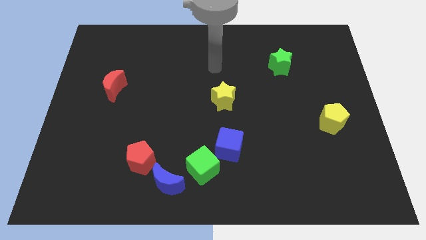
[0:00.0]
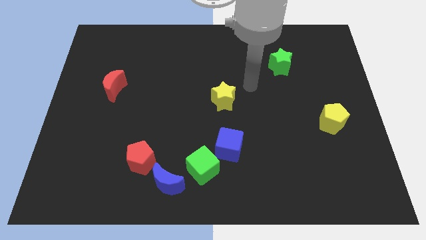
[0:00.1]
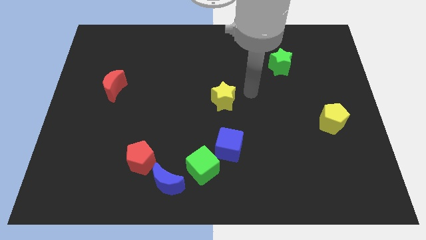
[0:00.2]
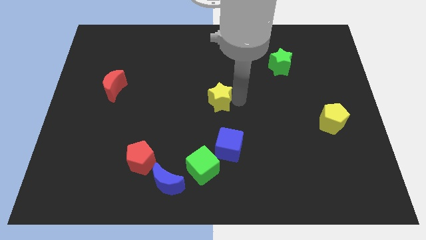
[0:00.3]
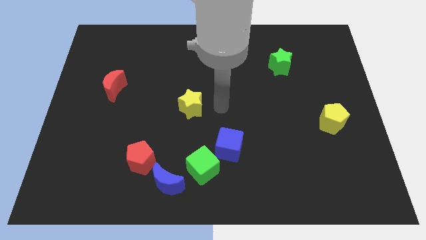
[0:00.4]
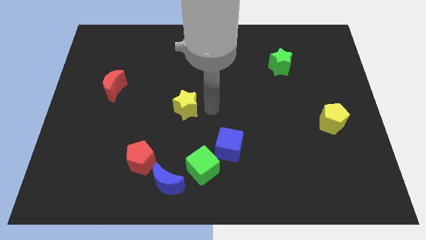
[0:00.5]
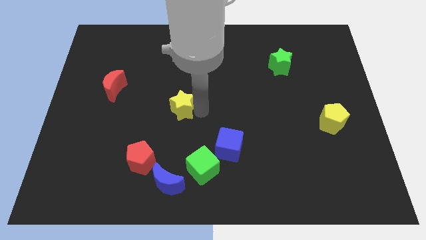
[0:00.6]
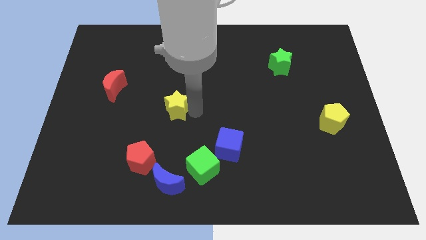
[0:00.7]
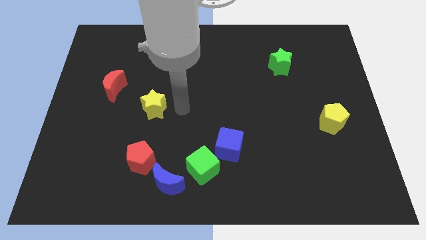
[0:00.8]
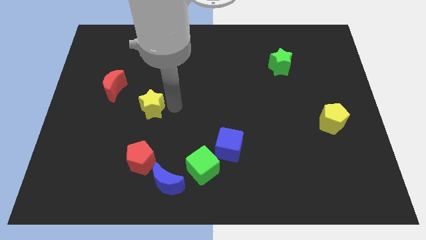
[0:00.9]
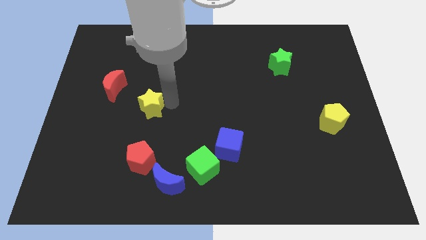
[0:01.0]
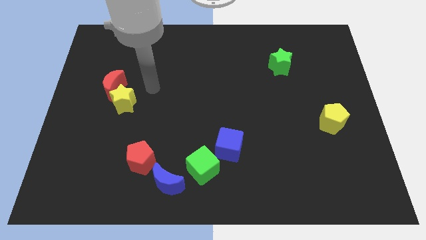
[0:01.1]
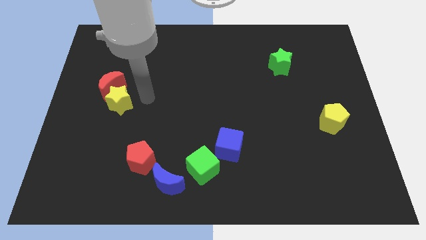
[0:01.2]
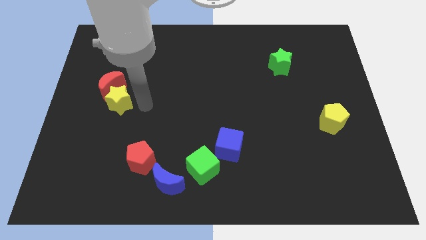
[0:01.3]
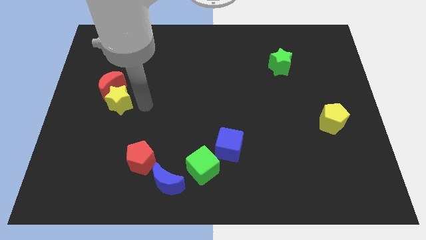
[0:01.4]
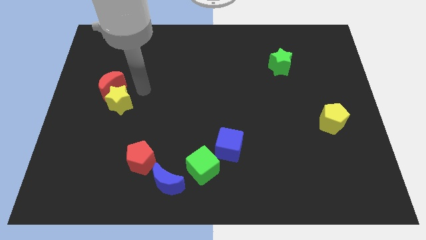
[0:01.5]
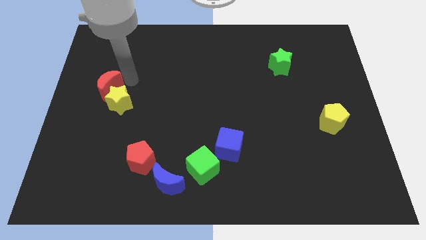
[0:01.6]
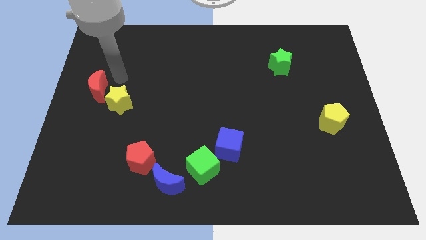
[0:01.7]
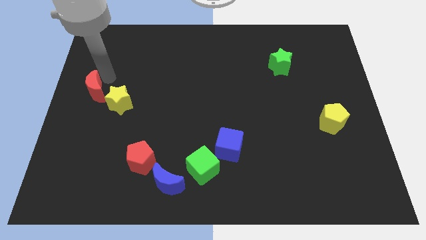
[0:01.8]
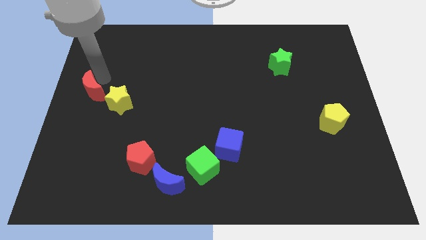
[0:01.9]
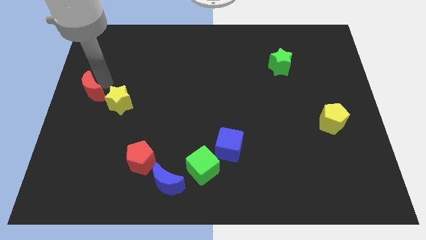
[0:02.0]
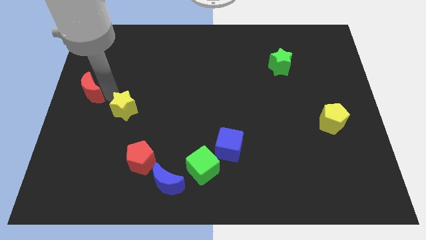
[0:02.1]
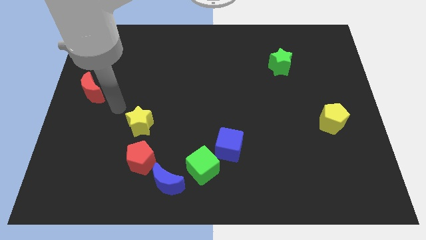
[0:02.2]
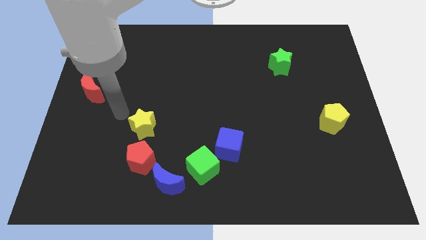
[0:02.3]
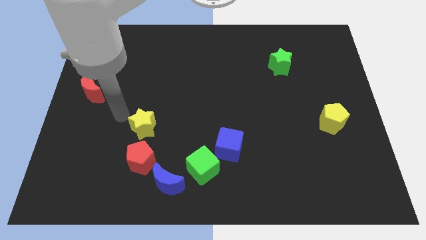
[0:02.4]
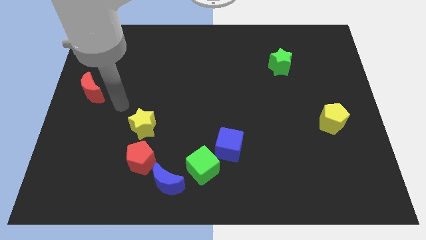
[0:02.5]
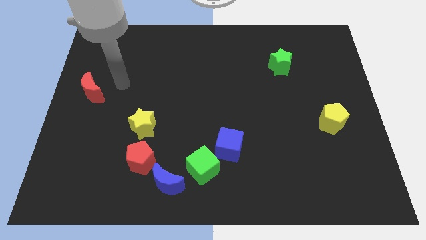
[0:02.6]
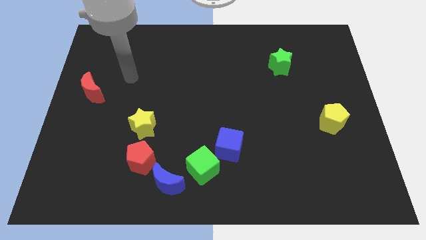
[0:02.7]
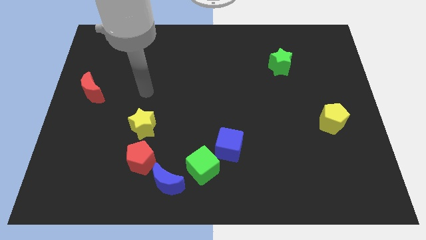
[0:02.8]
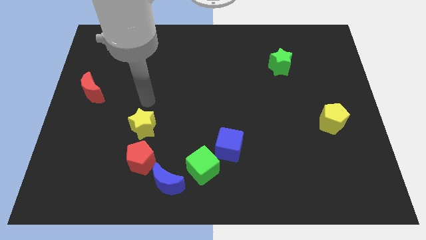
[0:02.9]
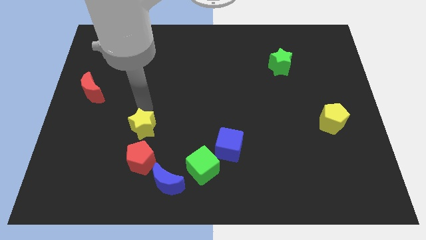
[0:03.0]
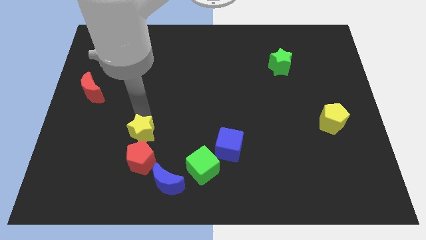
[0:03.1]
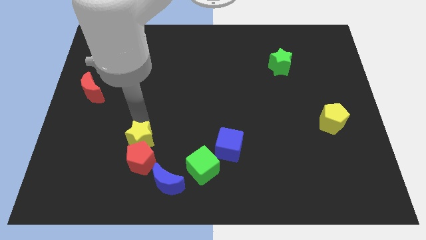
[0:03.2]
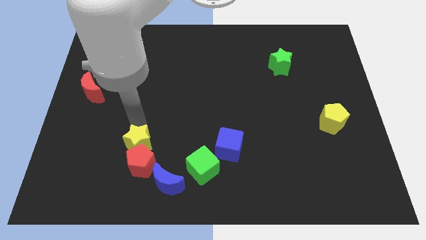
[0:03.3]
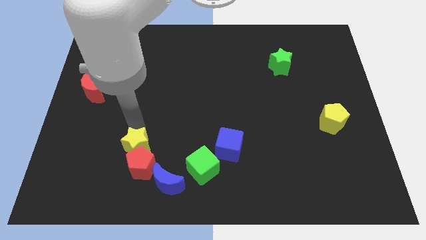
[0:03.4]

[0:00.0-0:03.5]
slide the yellow star to the red pentagon

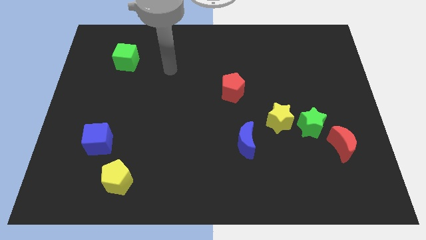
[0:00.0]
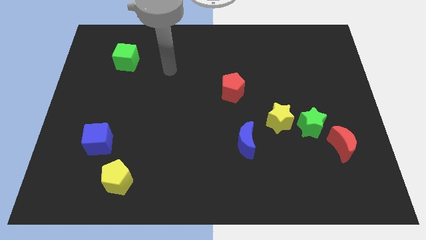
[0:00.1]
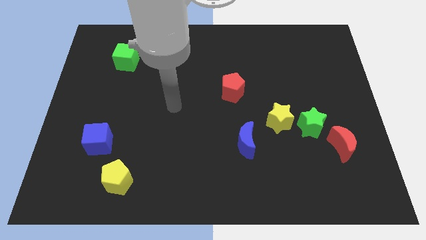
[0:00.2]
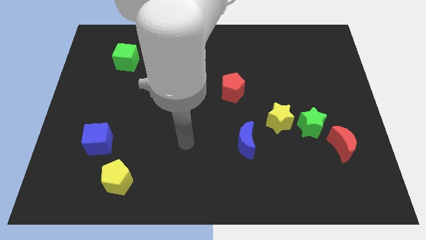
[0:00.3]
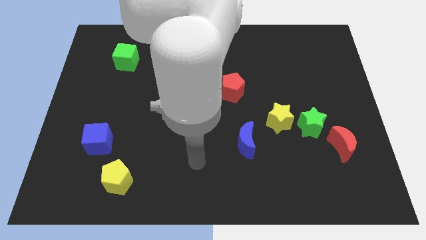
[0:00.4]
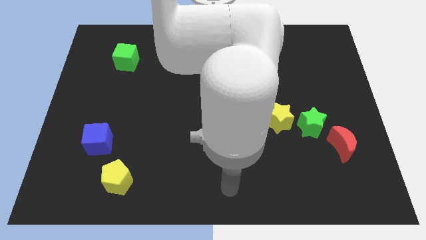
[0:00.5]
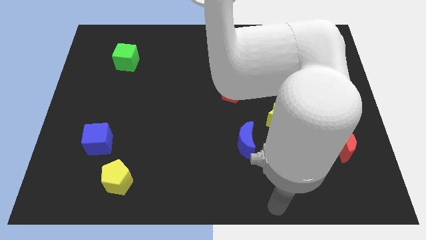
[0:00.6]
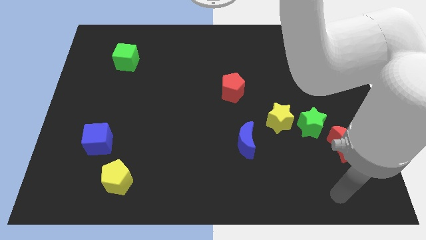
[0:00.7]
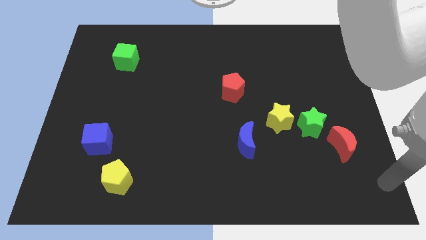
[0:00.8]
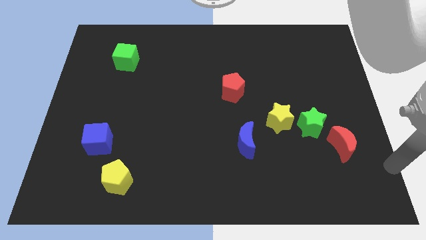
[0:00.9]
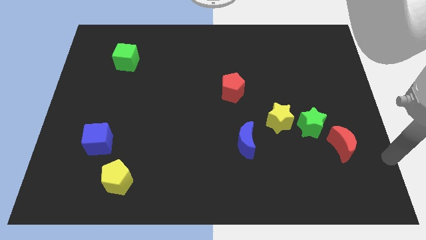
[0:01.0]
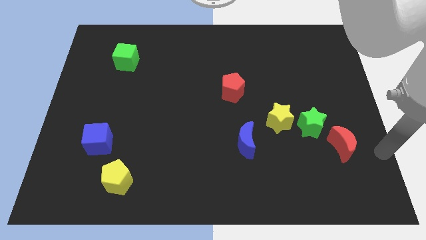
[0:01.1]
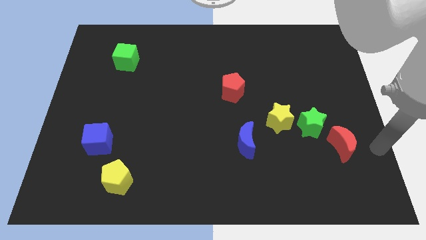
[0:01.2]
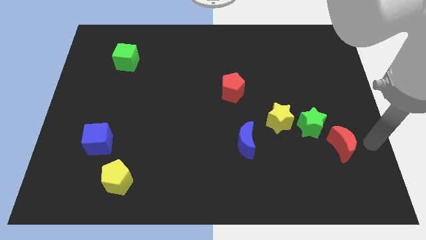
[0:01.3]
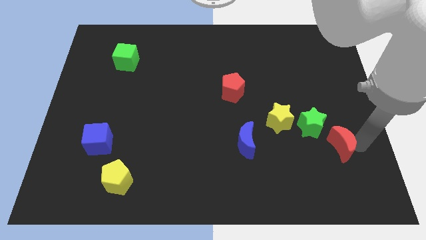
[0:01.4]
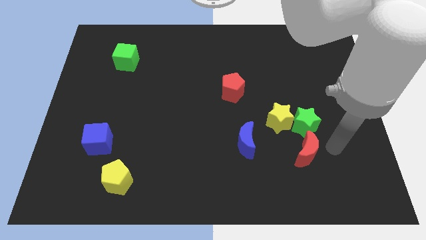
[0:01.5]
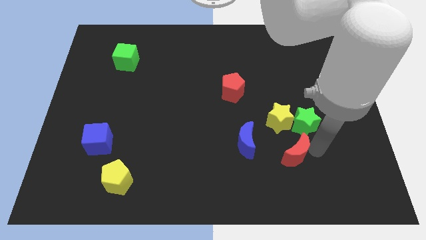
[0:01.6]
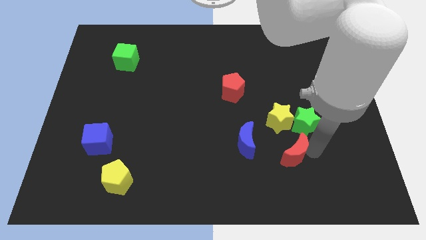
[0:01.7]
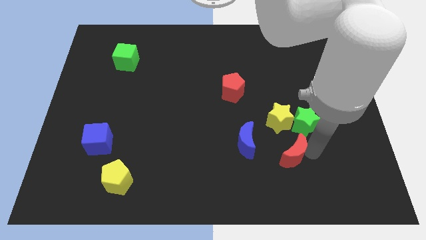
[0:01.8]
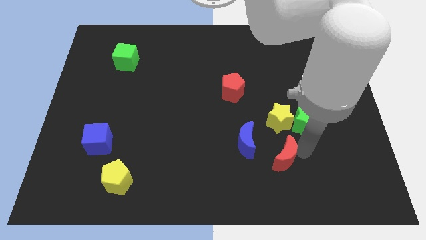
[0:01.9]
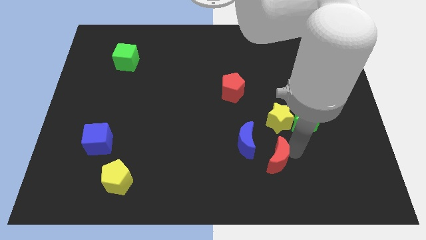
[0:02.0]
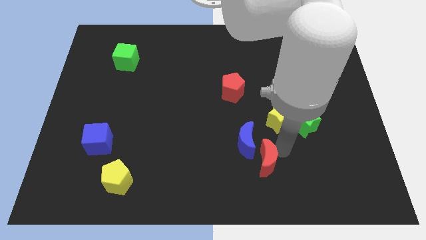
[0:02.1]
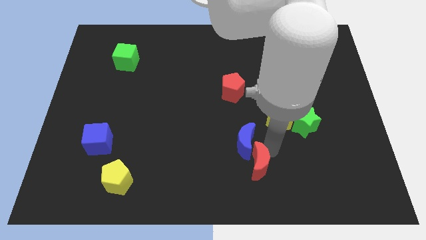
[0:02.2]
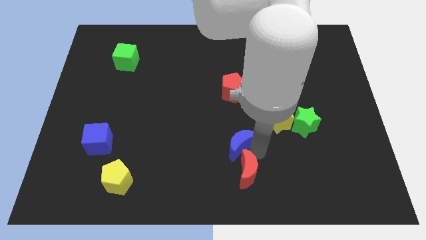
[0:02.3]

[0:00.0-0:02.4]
push the red moon close to the blue moon

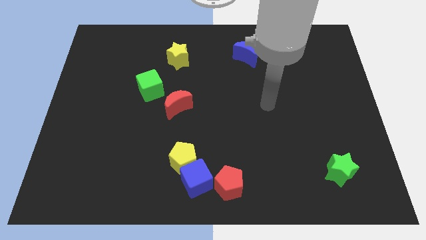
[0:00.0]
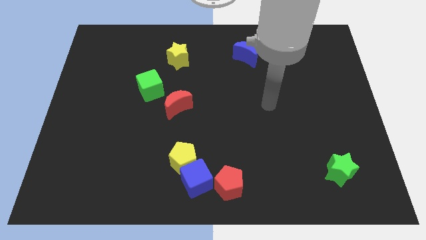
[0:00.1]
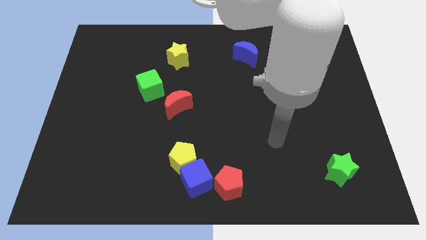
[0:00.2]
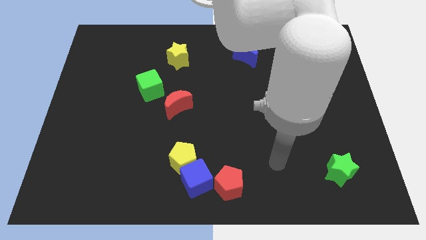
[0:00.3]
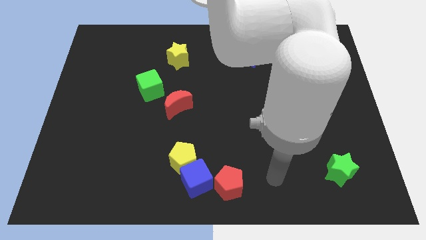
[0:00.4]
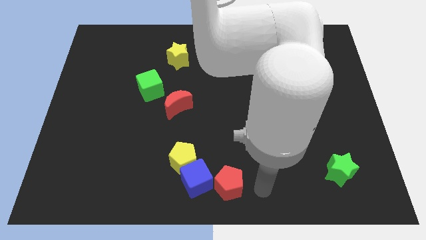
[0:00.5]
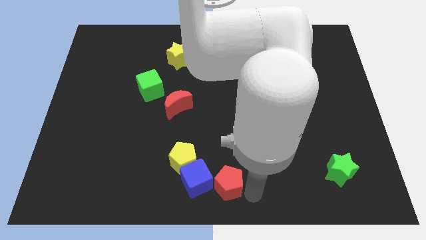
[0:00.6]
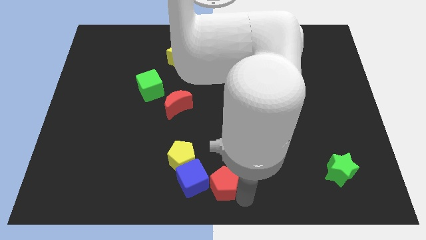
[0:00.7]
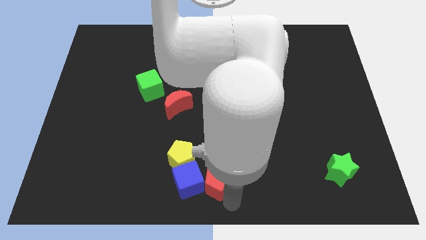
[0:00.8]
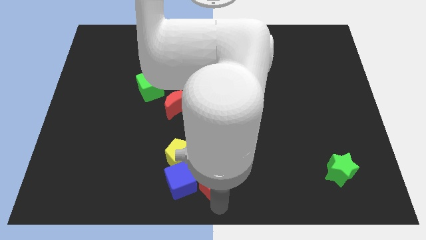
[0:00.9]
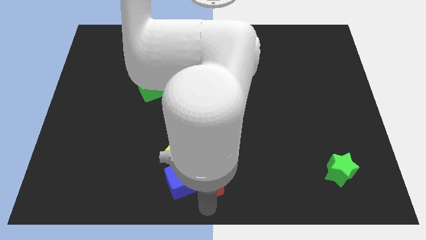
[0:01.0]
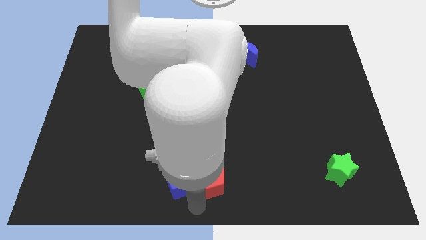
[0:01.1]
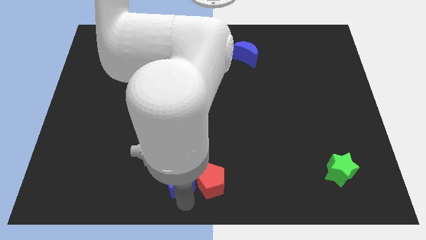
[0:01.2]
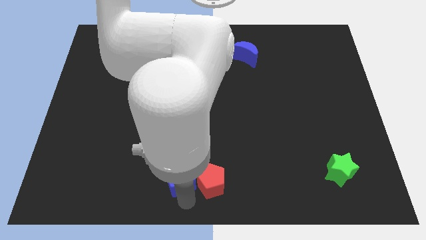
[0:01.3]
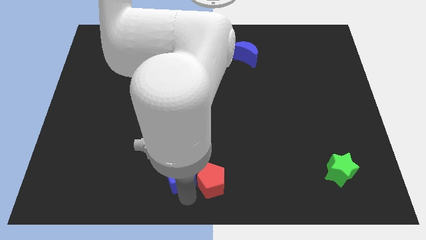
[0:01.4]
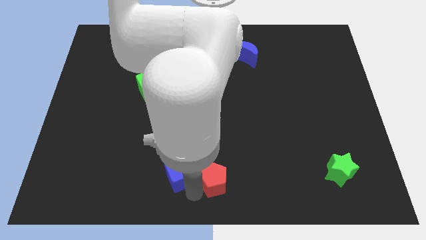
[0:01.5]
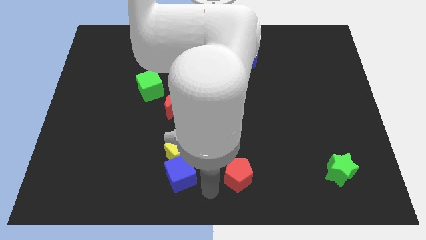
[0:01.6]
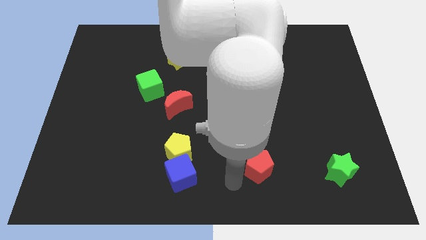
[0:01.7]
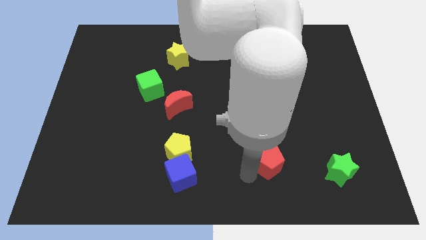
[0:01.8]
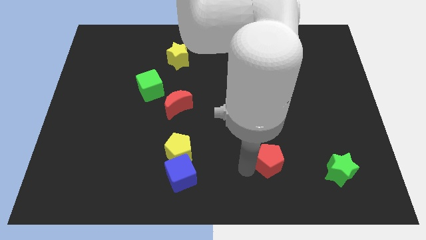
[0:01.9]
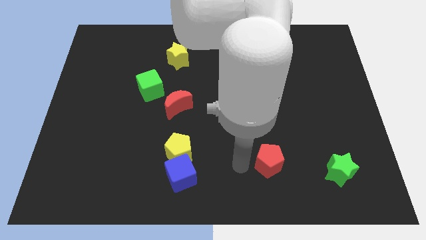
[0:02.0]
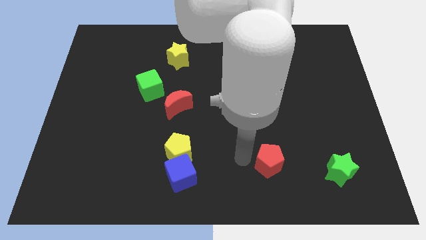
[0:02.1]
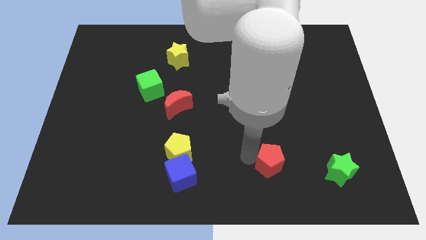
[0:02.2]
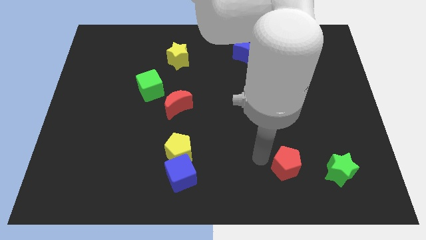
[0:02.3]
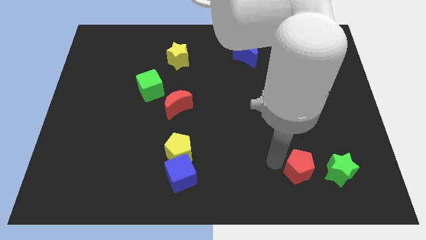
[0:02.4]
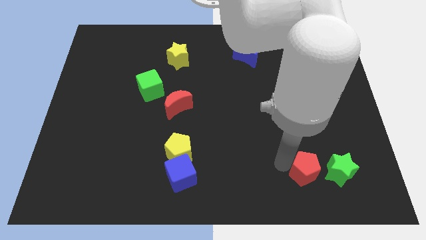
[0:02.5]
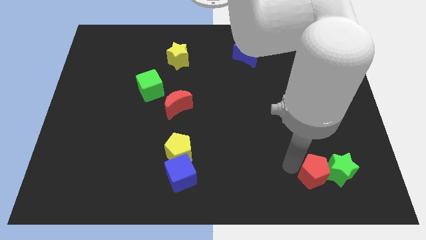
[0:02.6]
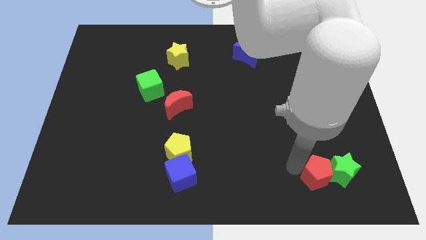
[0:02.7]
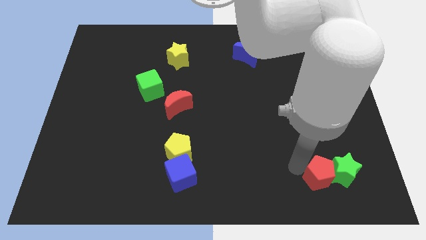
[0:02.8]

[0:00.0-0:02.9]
slide the red pentagon to the green star
